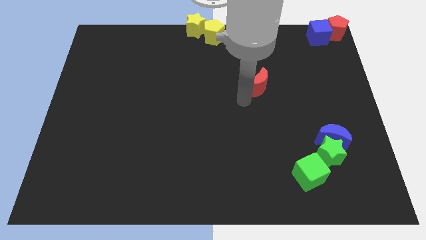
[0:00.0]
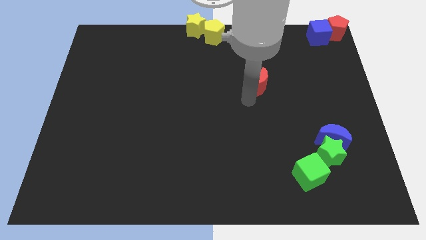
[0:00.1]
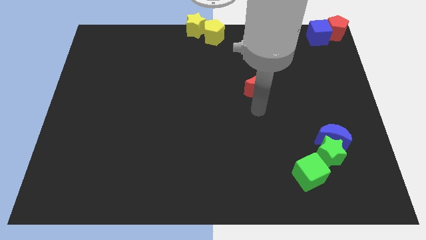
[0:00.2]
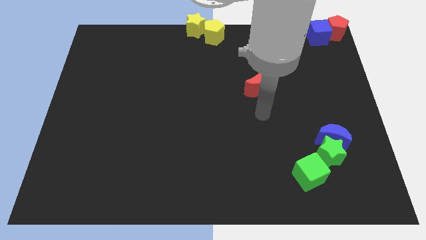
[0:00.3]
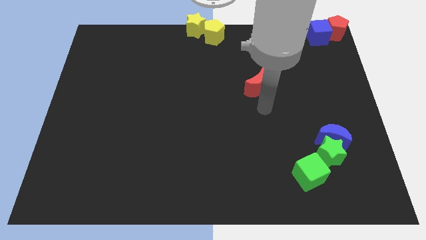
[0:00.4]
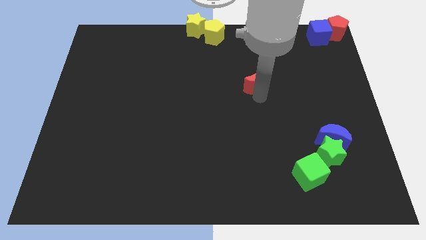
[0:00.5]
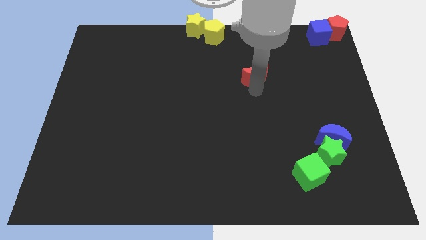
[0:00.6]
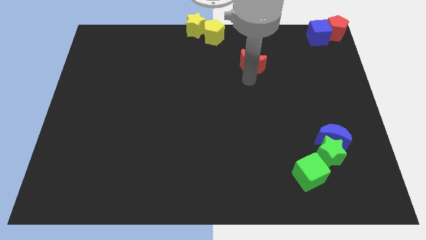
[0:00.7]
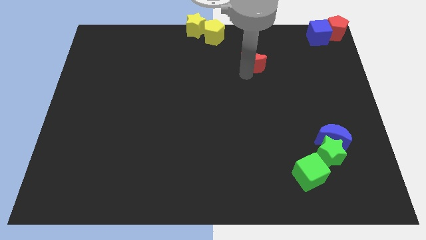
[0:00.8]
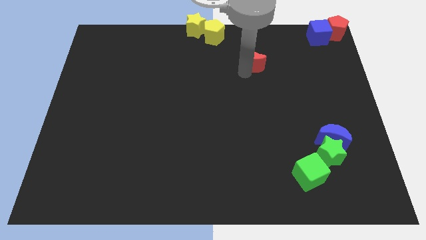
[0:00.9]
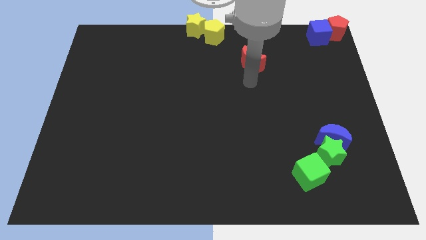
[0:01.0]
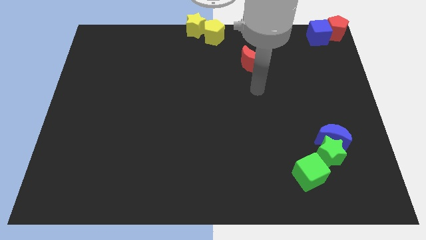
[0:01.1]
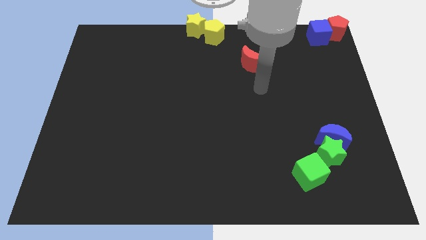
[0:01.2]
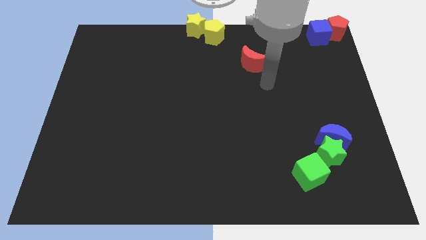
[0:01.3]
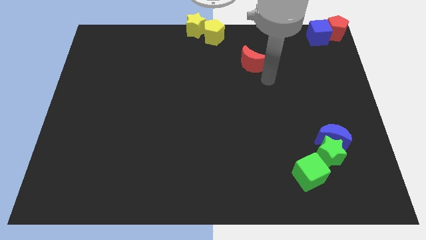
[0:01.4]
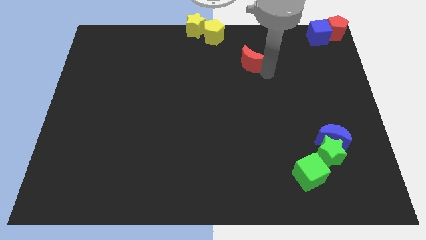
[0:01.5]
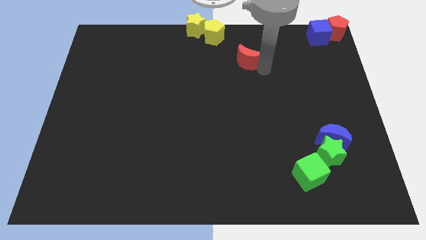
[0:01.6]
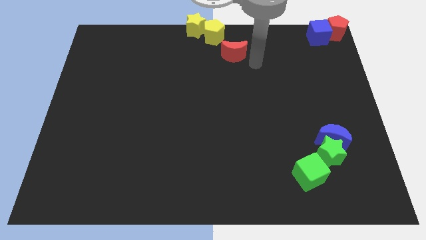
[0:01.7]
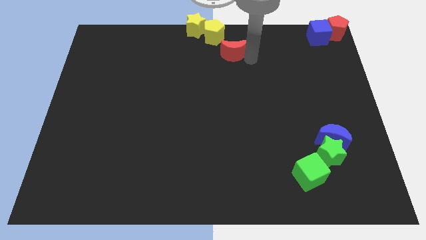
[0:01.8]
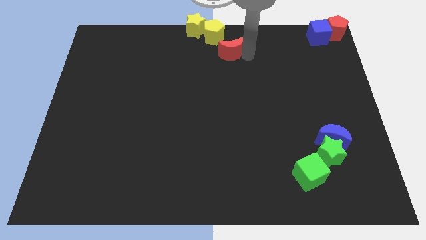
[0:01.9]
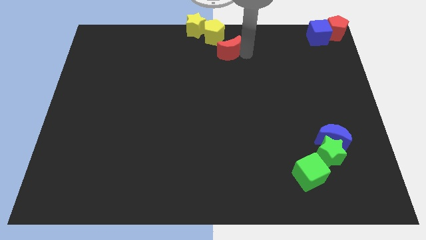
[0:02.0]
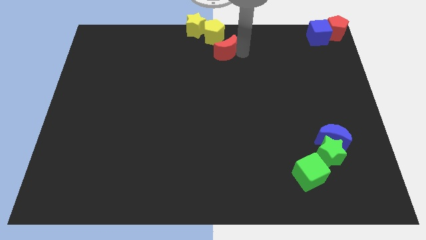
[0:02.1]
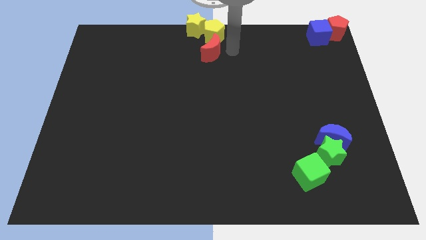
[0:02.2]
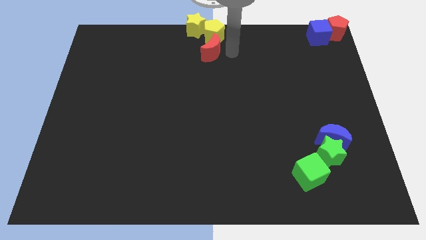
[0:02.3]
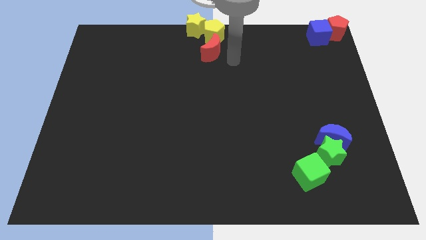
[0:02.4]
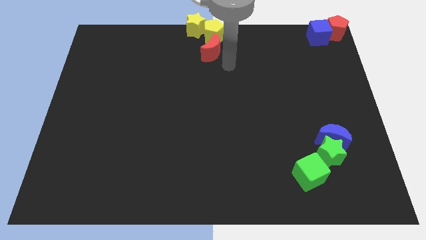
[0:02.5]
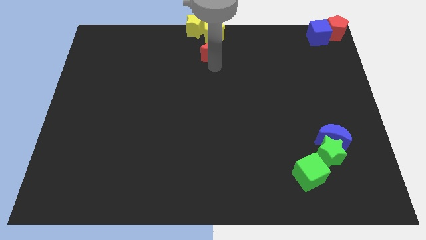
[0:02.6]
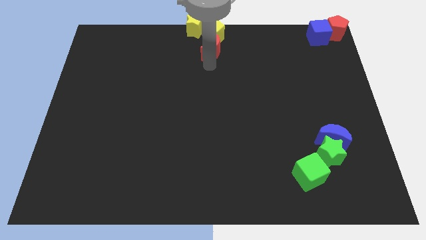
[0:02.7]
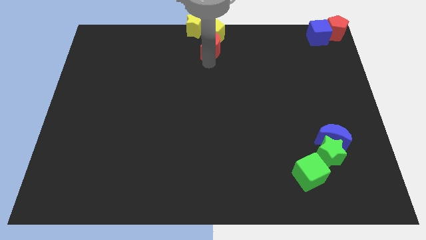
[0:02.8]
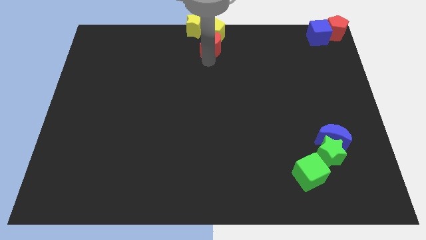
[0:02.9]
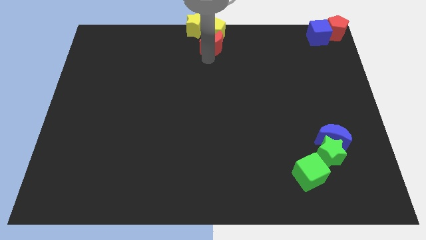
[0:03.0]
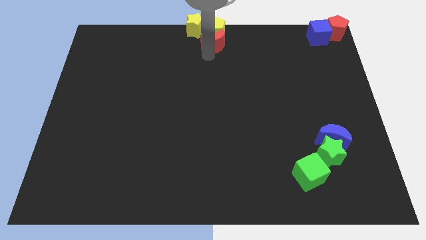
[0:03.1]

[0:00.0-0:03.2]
move the red moon towards the yellow pentagon

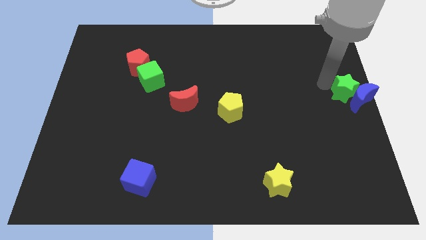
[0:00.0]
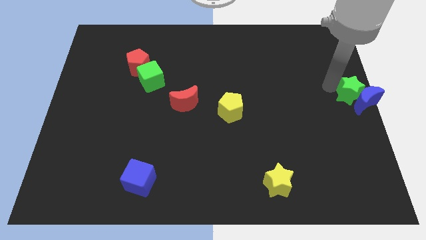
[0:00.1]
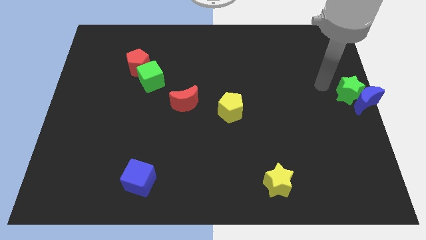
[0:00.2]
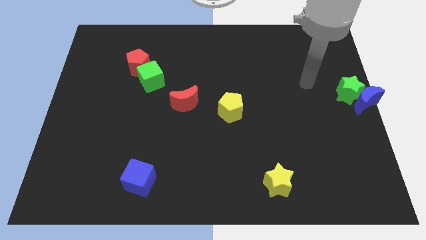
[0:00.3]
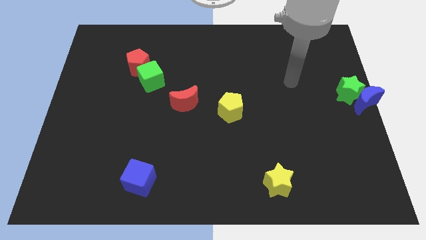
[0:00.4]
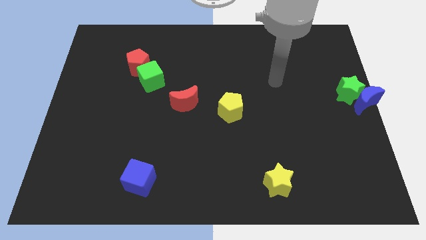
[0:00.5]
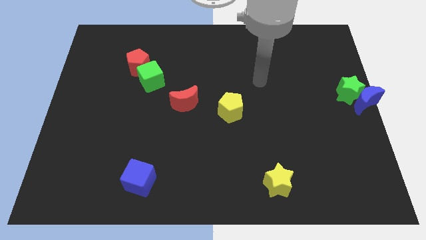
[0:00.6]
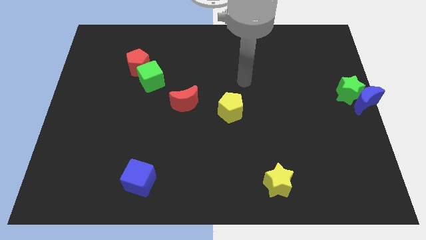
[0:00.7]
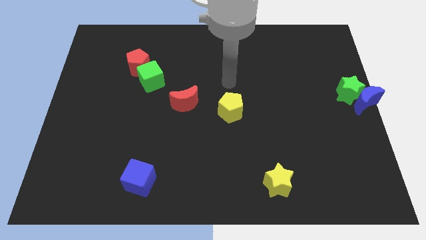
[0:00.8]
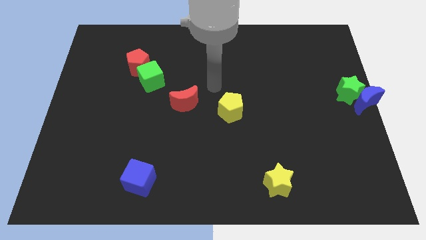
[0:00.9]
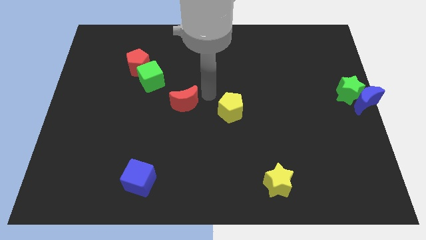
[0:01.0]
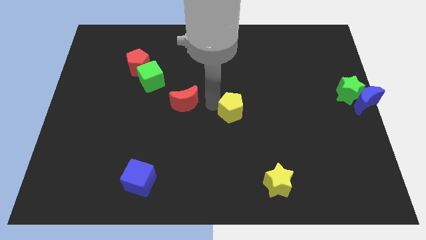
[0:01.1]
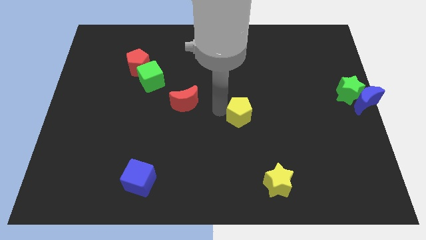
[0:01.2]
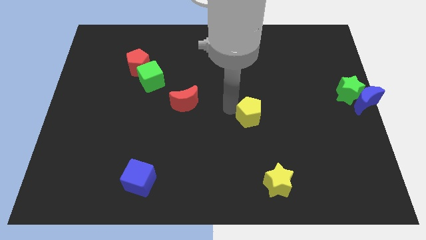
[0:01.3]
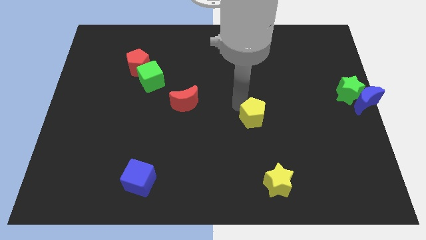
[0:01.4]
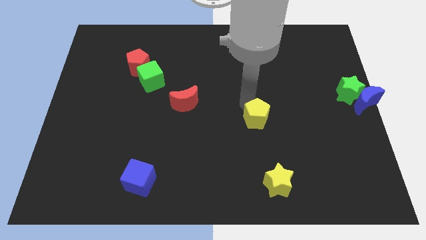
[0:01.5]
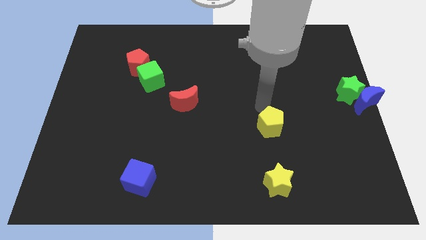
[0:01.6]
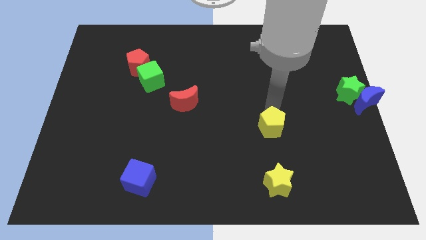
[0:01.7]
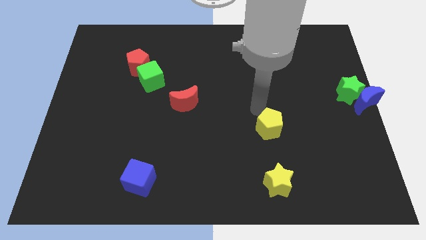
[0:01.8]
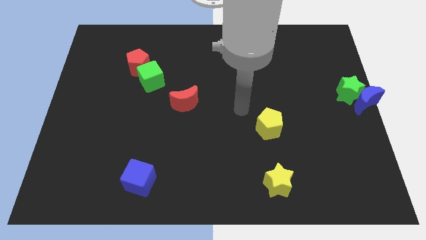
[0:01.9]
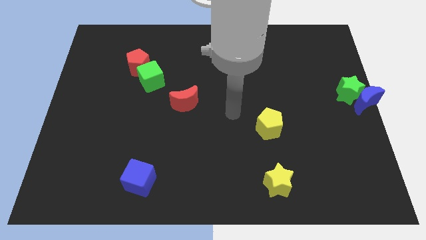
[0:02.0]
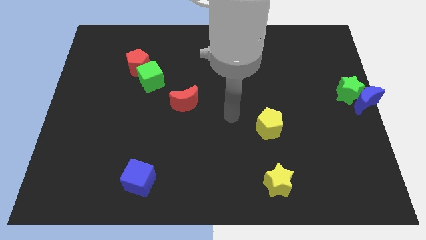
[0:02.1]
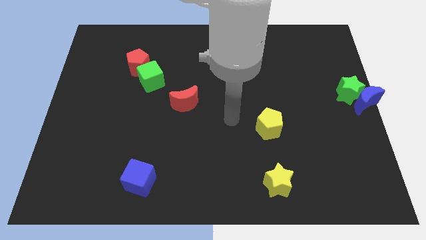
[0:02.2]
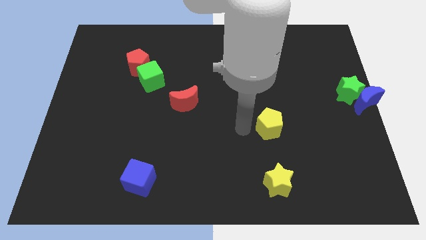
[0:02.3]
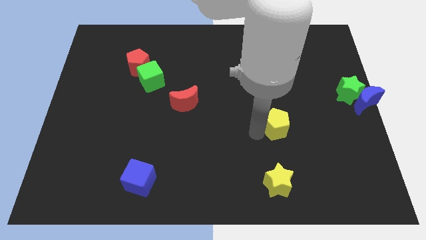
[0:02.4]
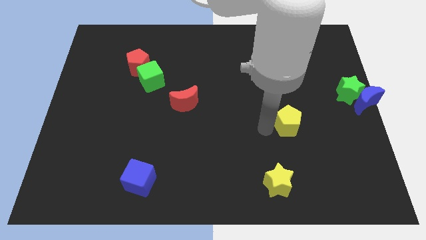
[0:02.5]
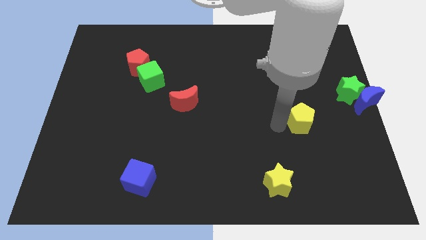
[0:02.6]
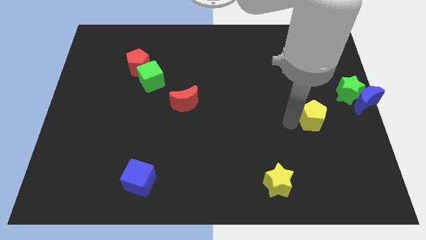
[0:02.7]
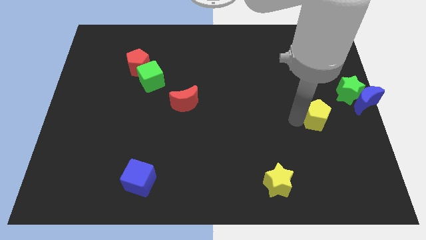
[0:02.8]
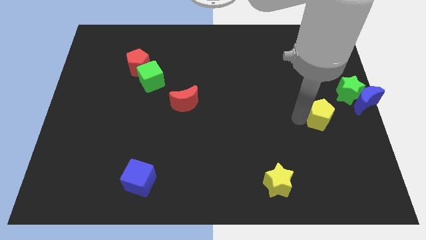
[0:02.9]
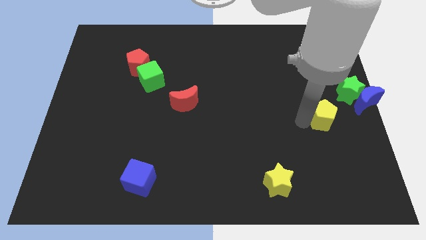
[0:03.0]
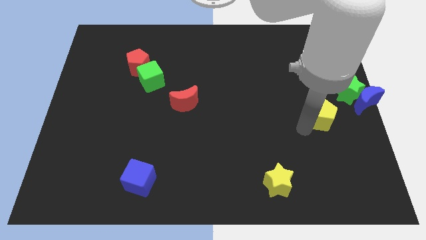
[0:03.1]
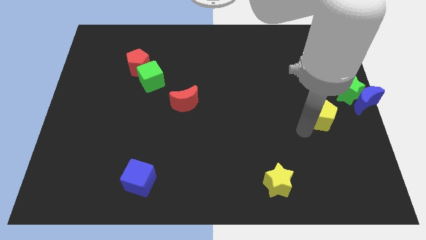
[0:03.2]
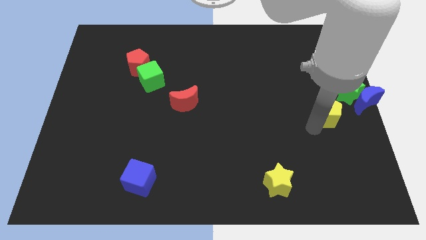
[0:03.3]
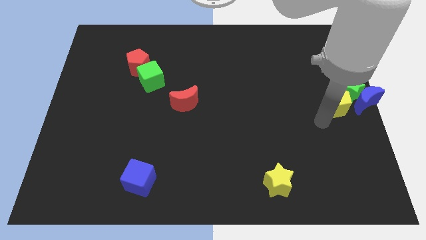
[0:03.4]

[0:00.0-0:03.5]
drag yellow pentagon towards green star and blue moon

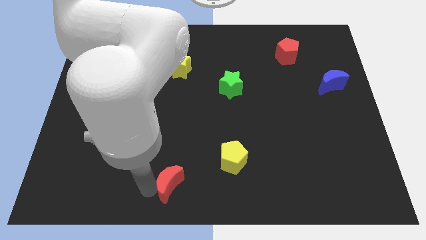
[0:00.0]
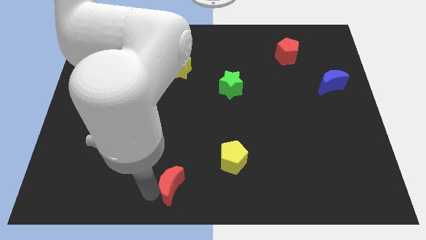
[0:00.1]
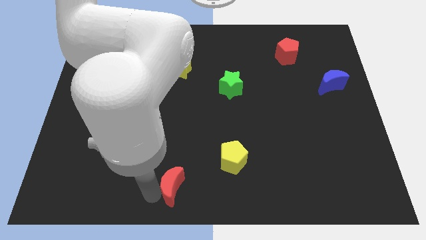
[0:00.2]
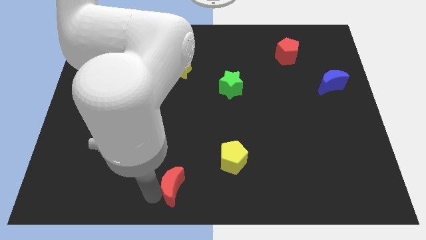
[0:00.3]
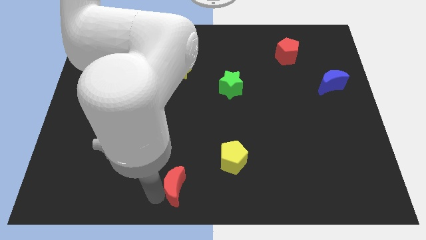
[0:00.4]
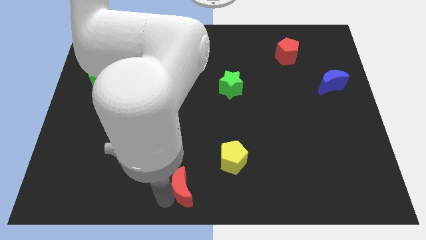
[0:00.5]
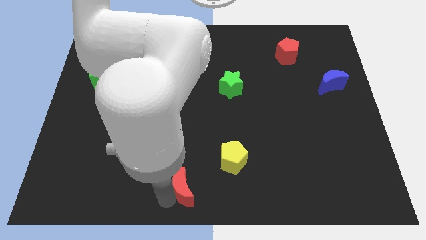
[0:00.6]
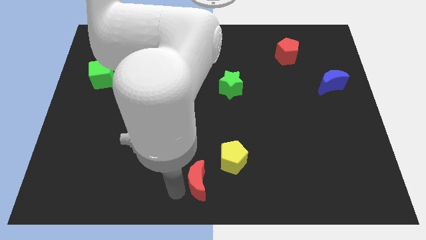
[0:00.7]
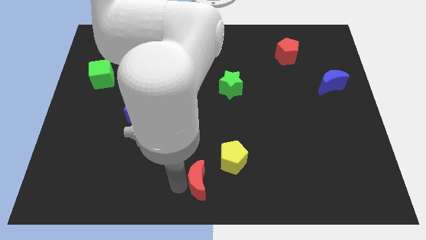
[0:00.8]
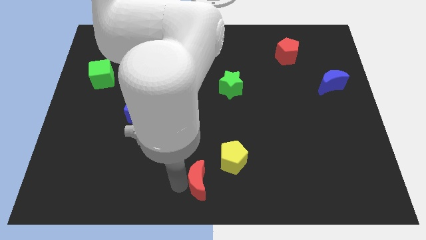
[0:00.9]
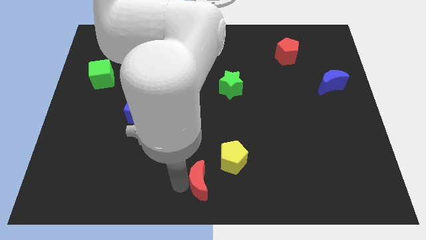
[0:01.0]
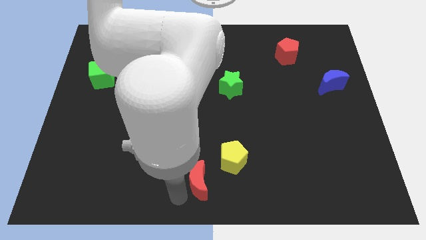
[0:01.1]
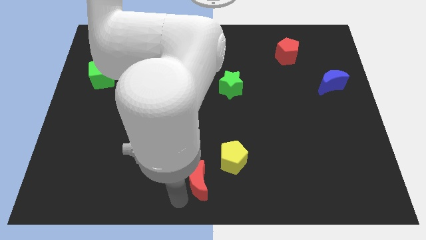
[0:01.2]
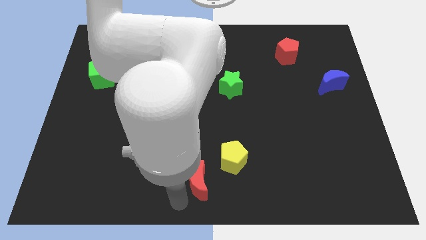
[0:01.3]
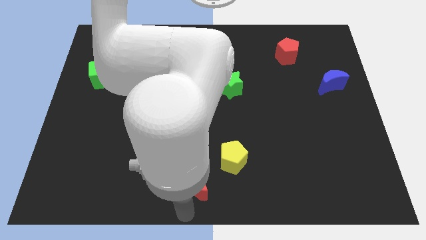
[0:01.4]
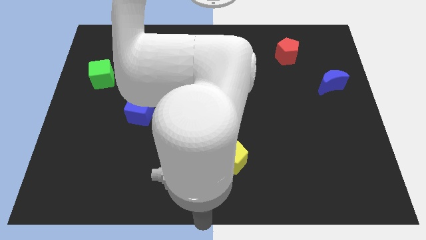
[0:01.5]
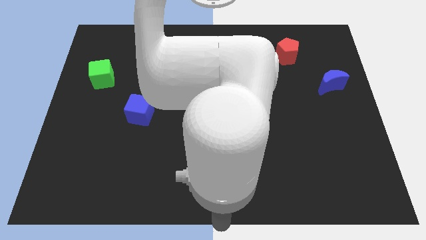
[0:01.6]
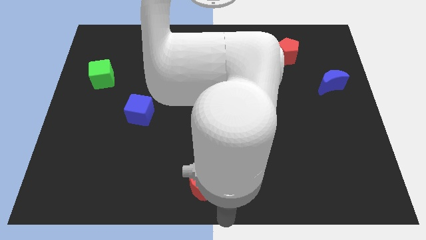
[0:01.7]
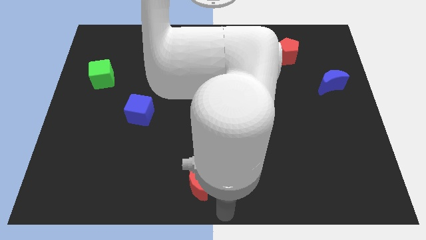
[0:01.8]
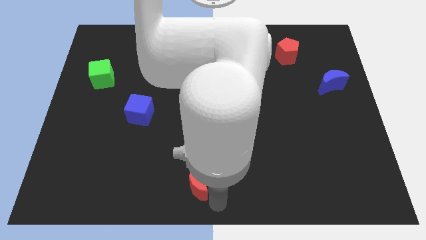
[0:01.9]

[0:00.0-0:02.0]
move the red crescent towards yellow pentagon

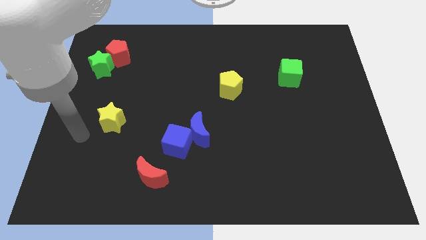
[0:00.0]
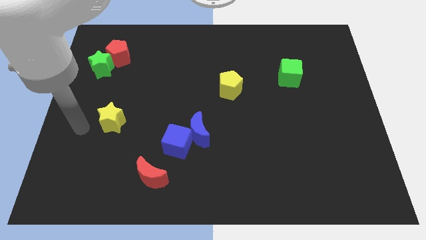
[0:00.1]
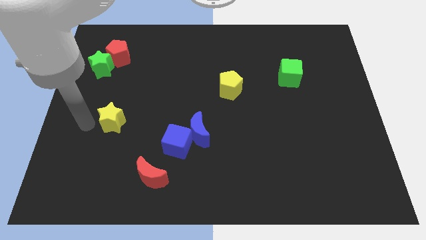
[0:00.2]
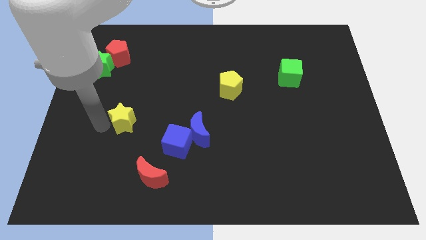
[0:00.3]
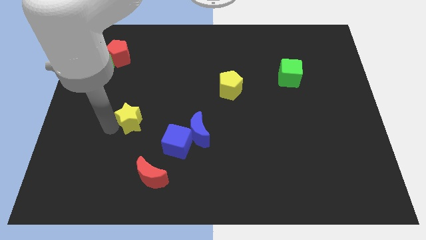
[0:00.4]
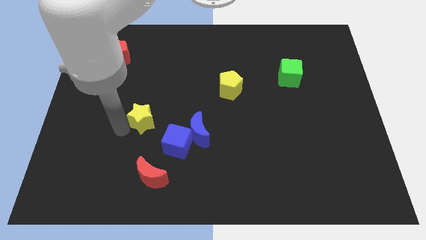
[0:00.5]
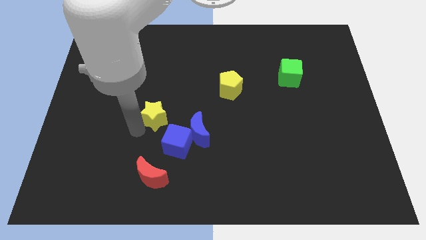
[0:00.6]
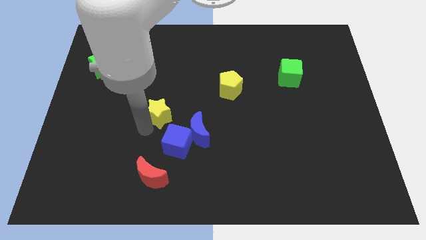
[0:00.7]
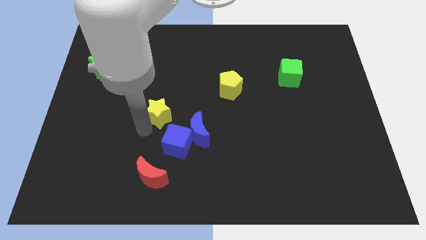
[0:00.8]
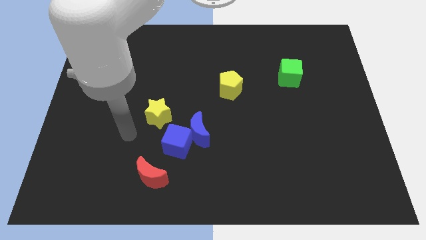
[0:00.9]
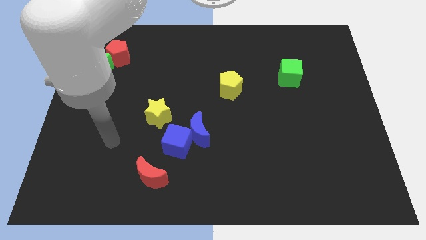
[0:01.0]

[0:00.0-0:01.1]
move the yellow star to the top left side of the blue cube
